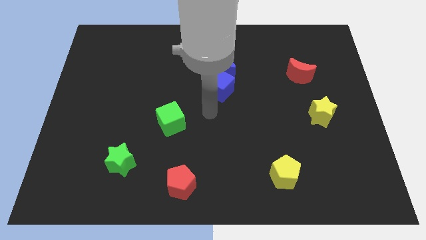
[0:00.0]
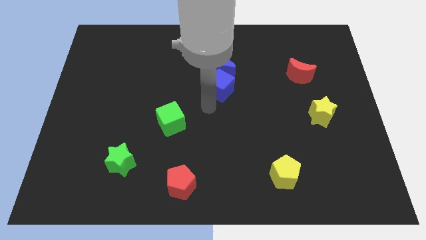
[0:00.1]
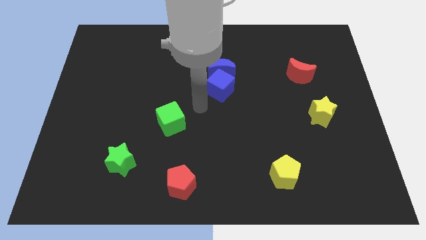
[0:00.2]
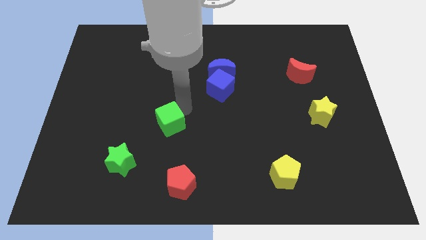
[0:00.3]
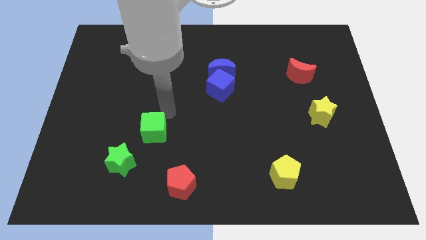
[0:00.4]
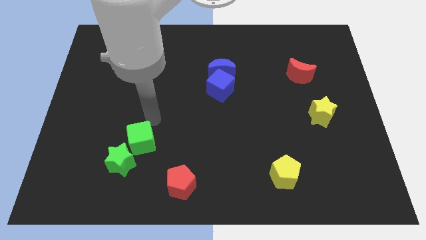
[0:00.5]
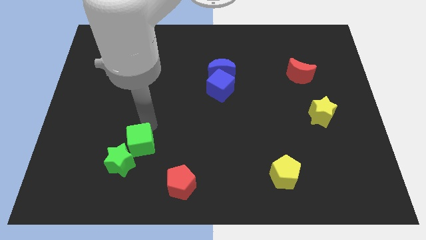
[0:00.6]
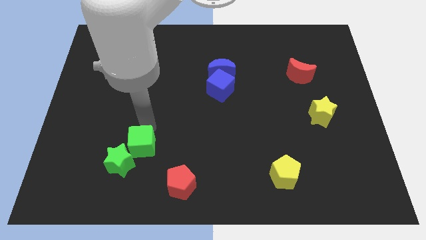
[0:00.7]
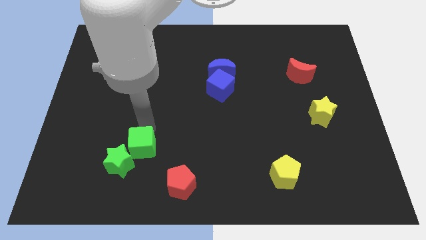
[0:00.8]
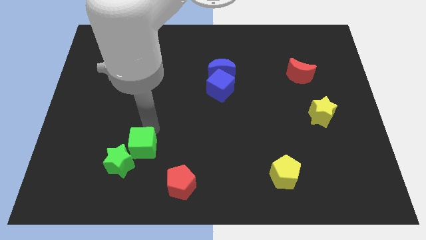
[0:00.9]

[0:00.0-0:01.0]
put the green cube into the green star

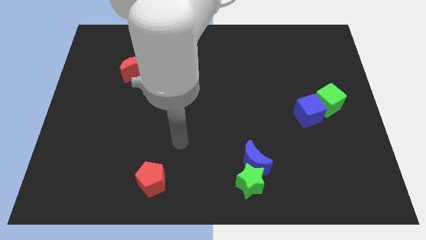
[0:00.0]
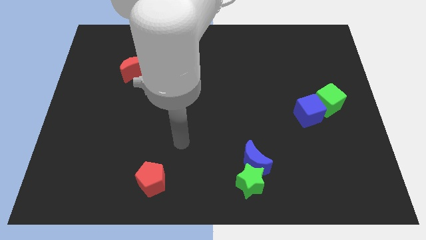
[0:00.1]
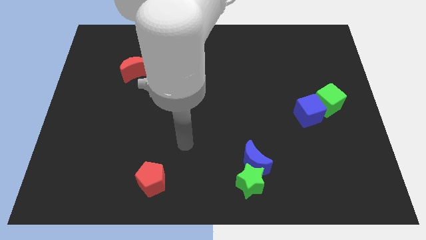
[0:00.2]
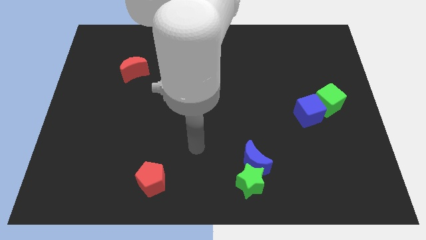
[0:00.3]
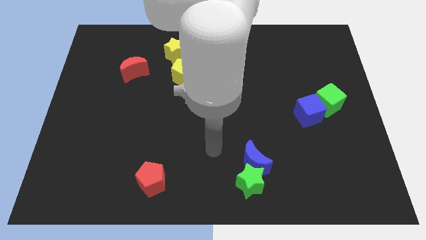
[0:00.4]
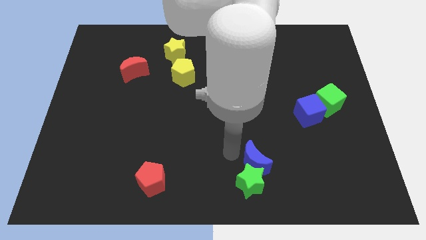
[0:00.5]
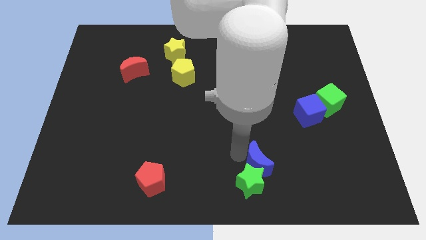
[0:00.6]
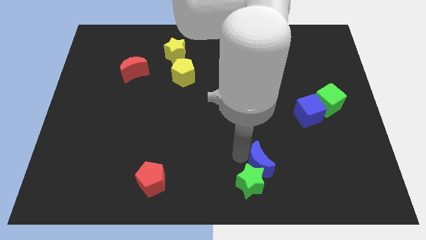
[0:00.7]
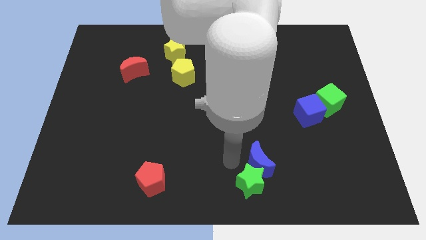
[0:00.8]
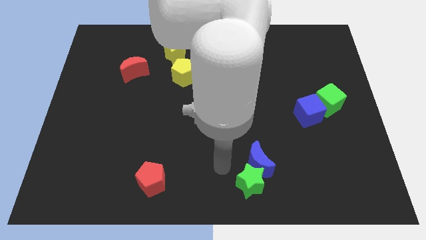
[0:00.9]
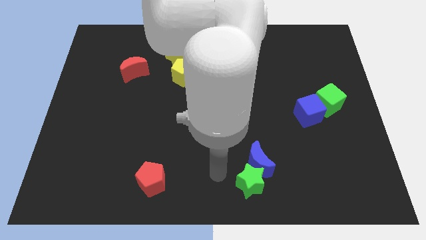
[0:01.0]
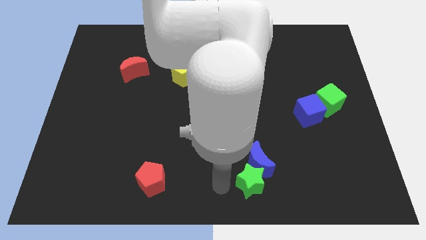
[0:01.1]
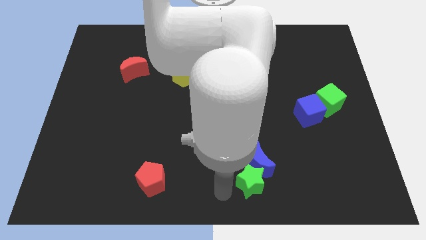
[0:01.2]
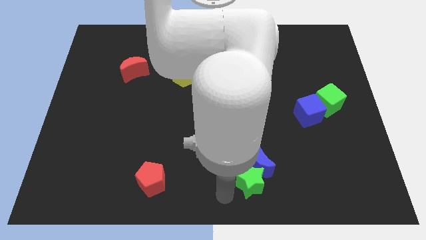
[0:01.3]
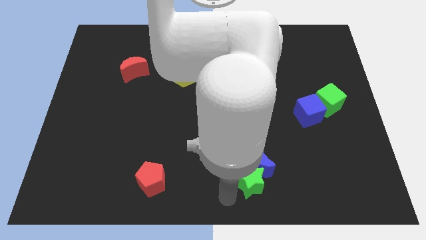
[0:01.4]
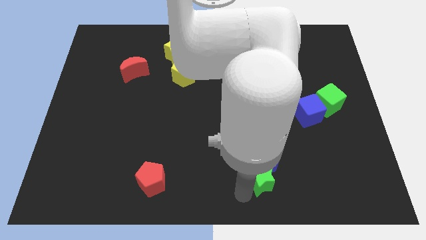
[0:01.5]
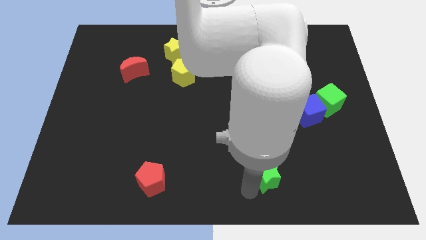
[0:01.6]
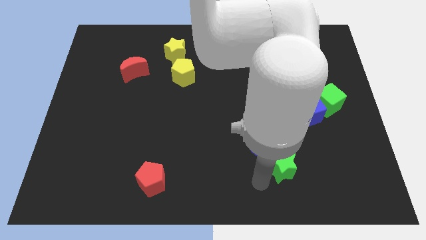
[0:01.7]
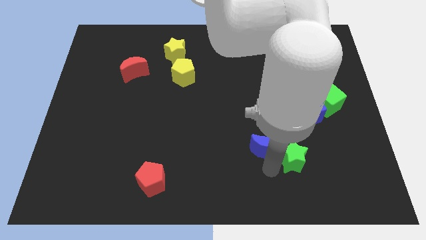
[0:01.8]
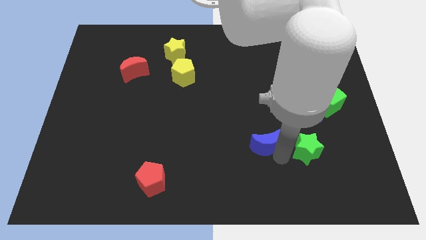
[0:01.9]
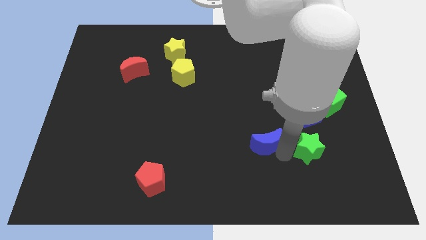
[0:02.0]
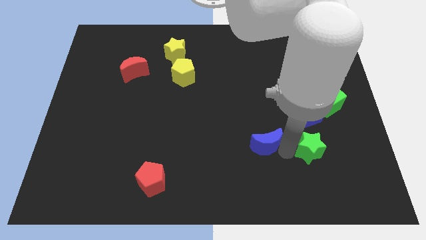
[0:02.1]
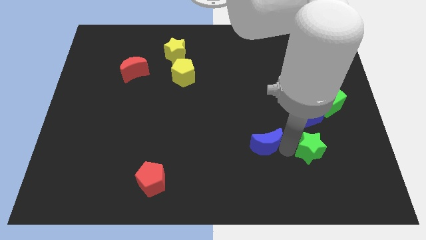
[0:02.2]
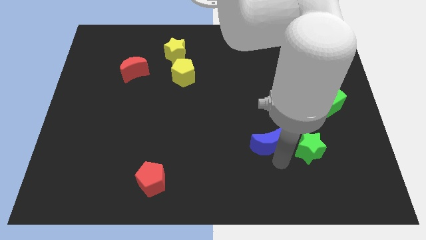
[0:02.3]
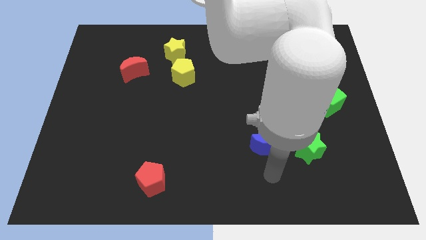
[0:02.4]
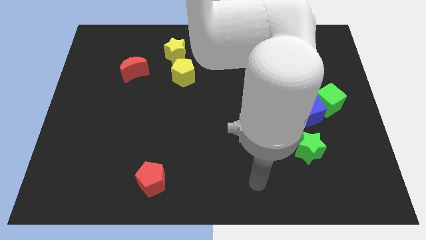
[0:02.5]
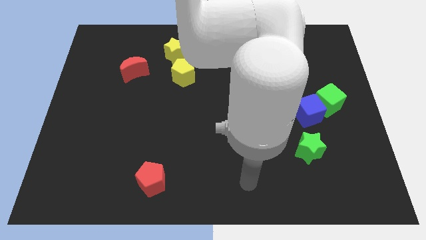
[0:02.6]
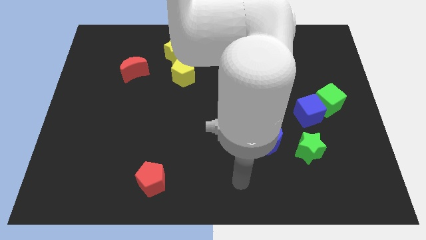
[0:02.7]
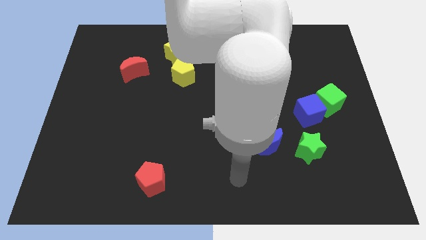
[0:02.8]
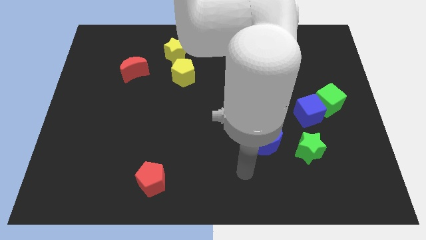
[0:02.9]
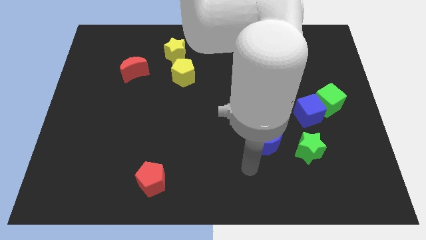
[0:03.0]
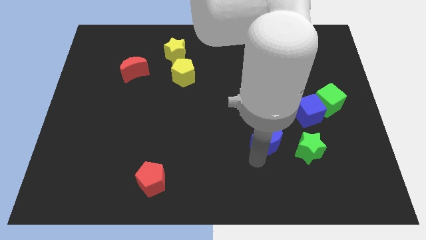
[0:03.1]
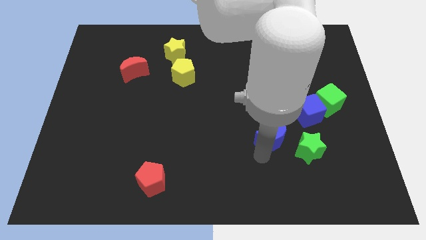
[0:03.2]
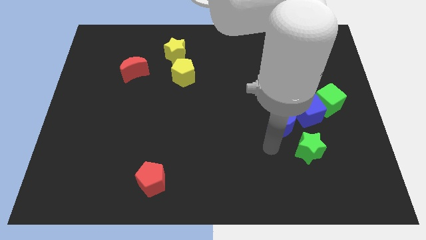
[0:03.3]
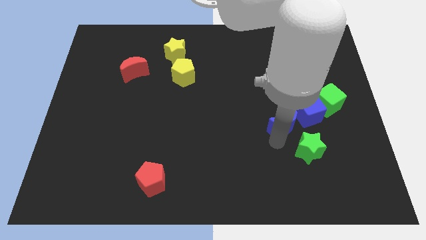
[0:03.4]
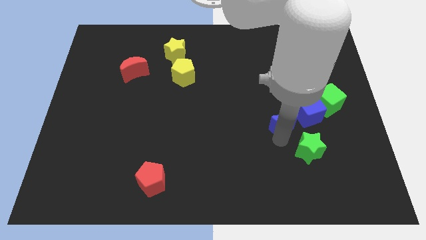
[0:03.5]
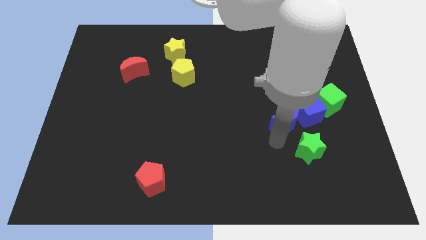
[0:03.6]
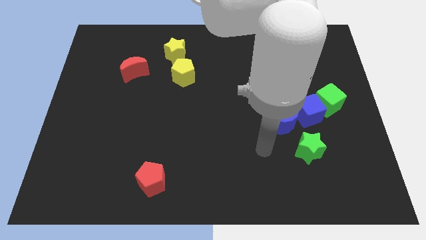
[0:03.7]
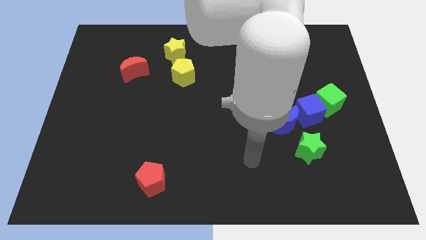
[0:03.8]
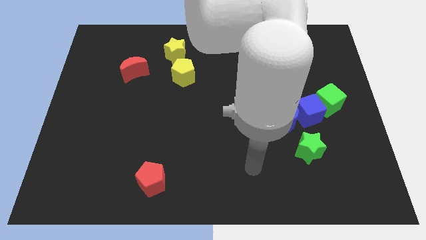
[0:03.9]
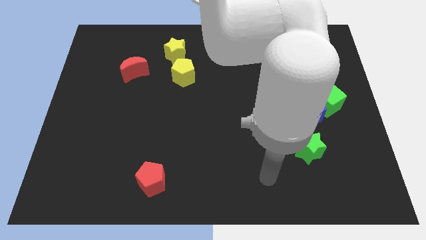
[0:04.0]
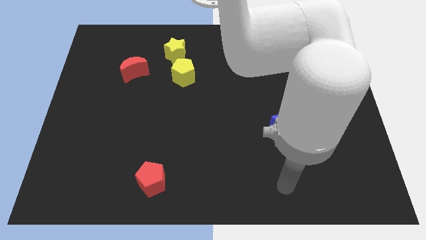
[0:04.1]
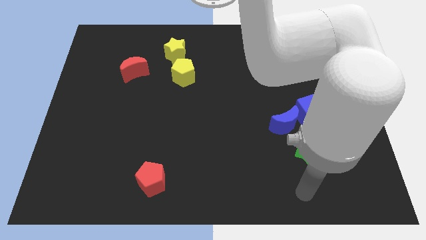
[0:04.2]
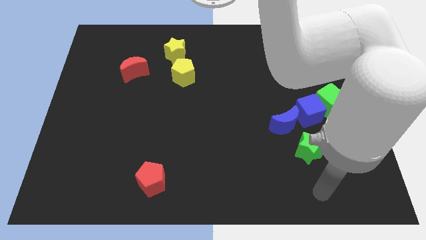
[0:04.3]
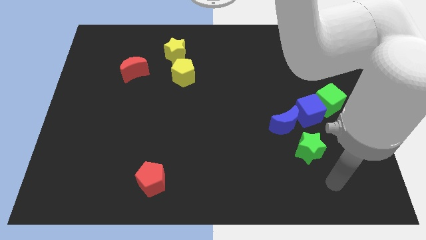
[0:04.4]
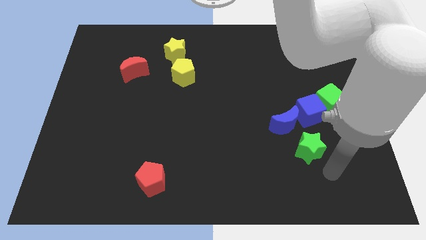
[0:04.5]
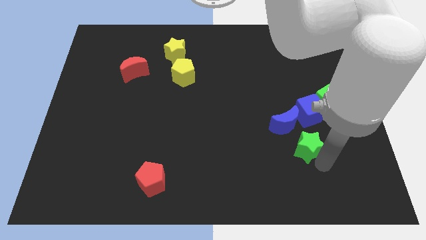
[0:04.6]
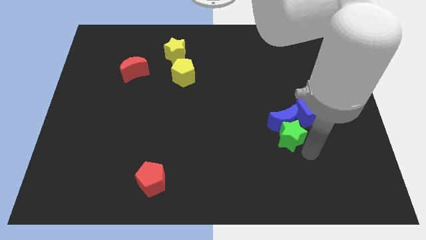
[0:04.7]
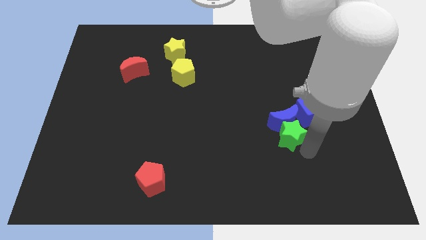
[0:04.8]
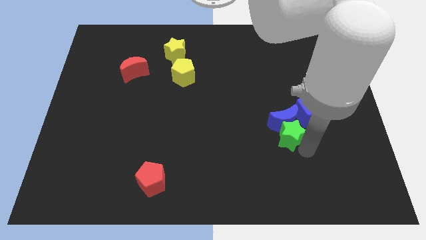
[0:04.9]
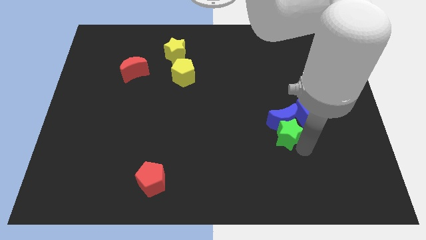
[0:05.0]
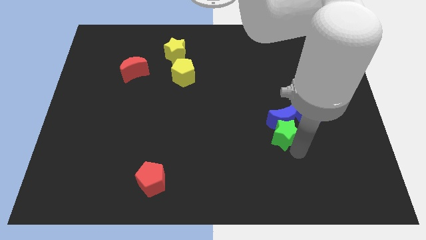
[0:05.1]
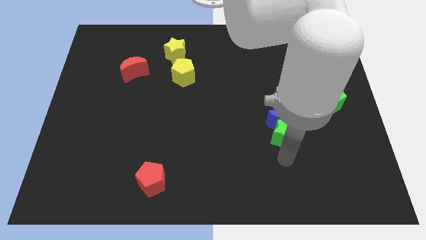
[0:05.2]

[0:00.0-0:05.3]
push the blue crescent and the green star to the left of the blue cube

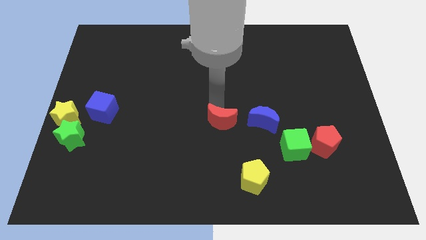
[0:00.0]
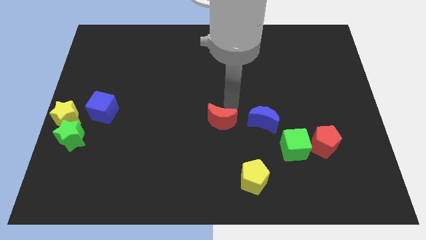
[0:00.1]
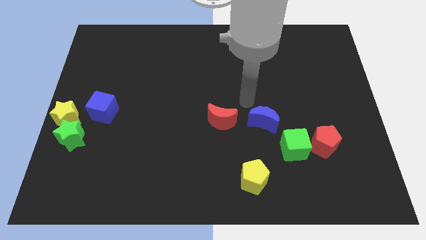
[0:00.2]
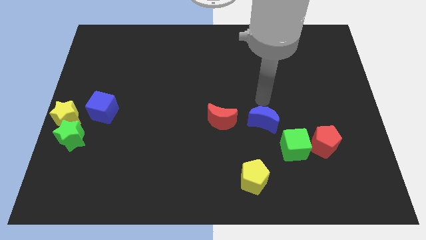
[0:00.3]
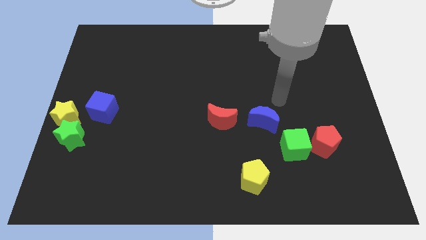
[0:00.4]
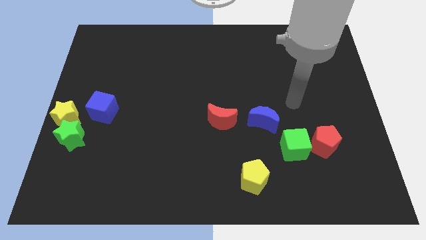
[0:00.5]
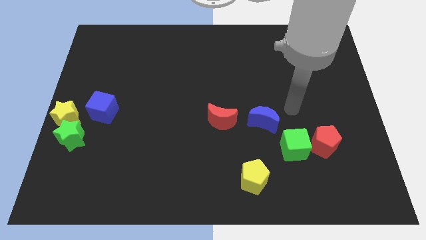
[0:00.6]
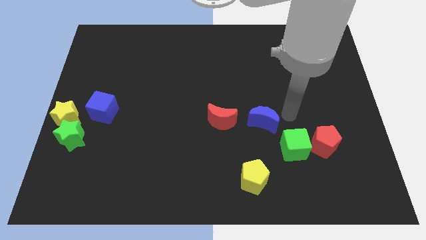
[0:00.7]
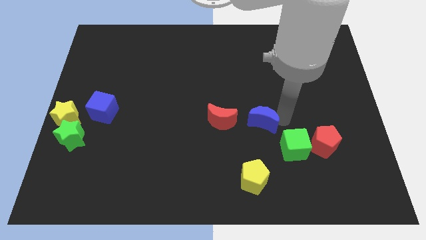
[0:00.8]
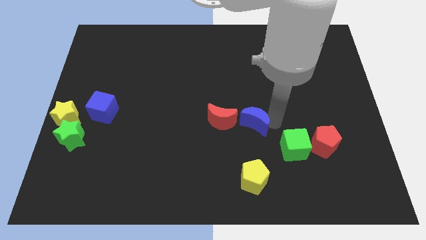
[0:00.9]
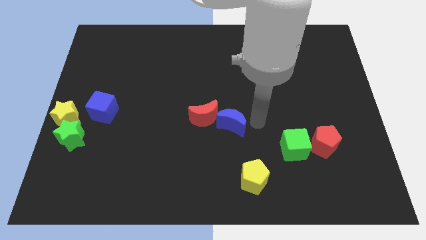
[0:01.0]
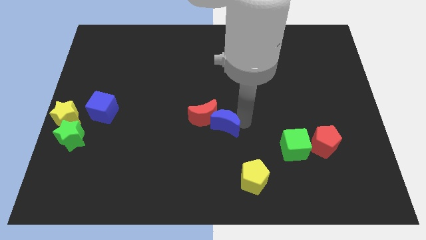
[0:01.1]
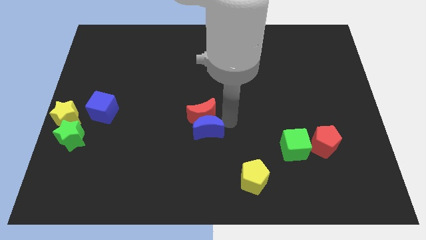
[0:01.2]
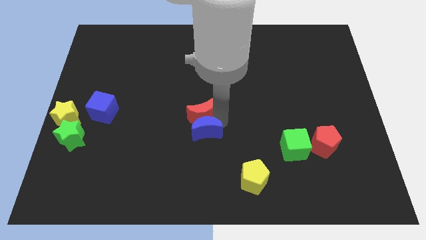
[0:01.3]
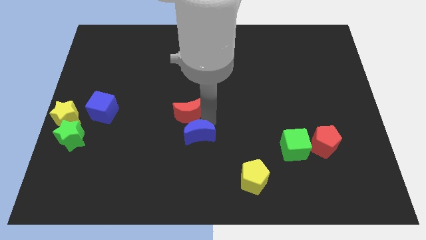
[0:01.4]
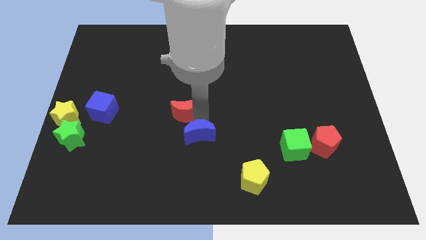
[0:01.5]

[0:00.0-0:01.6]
push blue crescents below red crescents

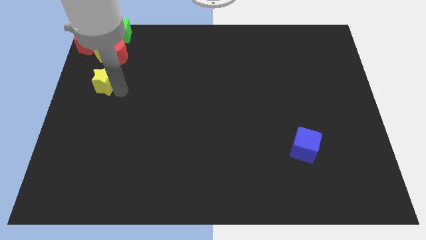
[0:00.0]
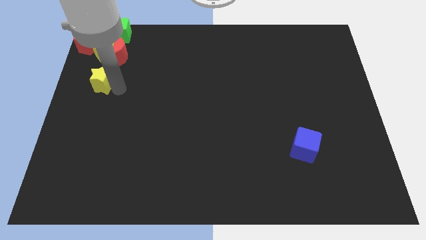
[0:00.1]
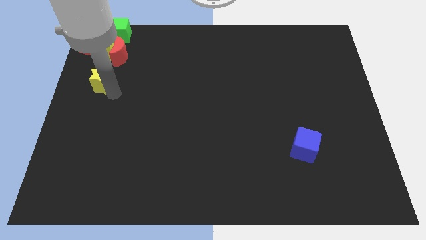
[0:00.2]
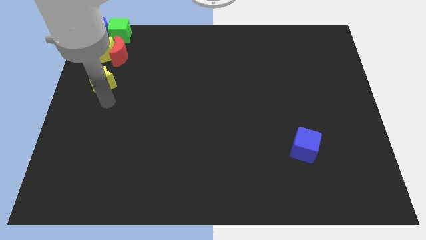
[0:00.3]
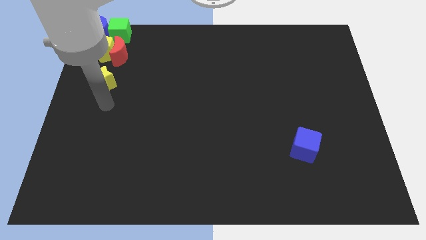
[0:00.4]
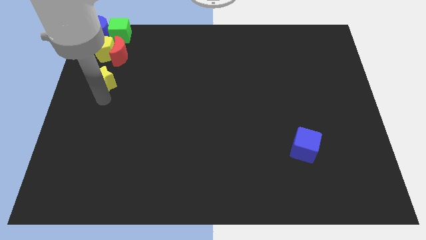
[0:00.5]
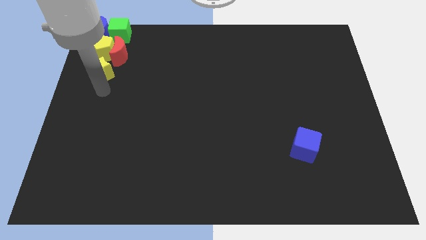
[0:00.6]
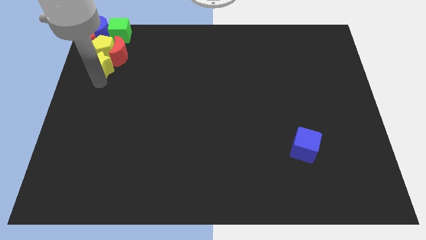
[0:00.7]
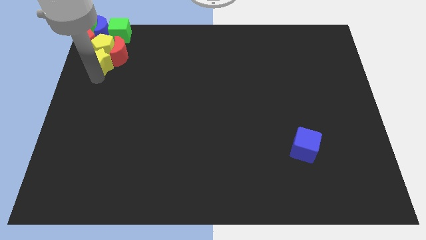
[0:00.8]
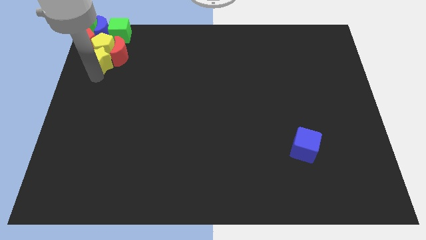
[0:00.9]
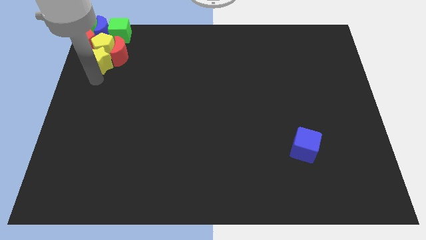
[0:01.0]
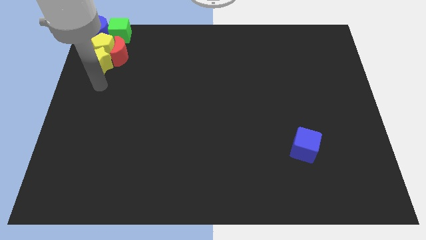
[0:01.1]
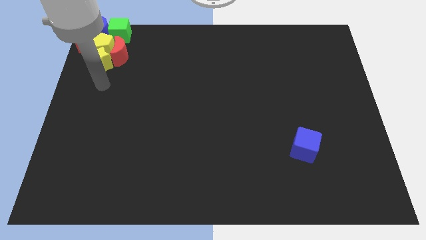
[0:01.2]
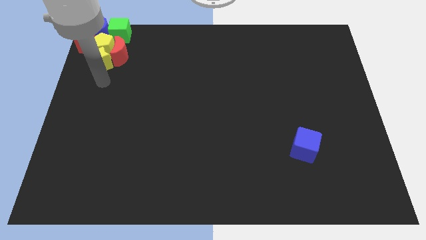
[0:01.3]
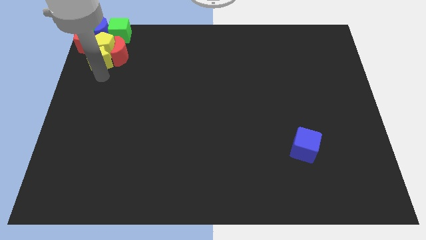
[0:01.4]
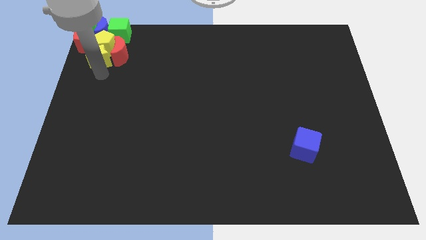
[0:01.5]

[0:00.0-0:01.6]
move the yellow star to the group of blocks
